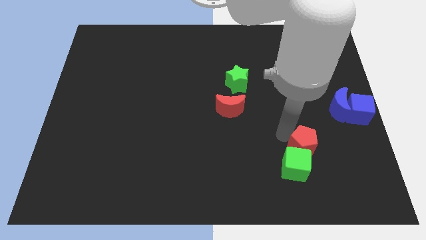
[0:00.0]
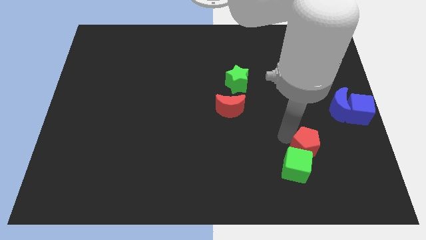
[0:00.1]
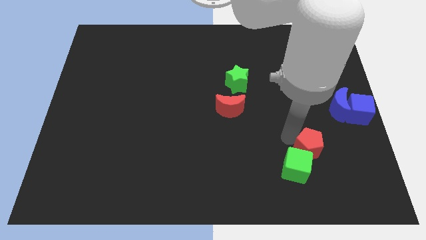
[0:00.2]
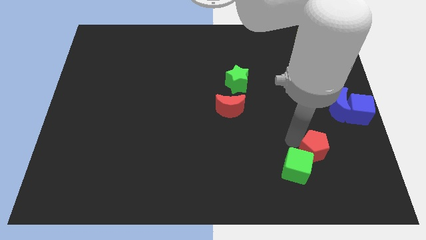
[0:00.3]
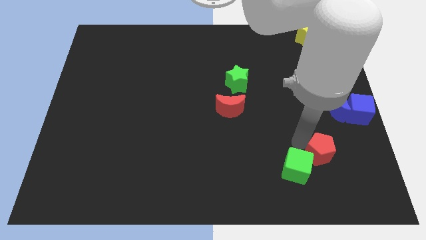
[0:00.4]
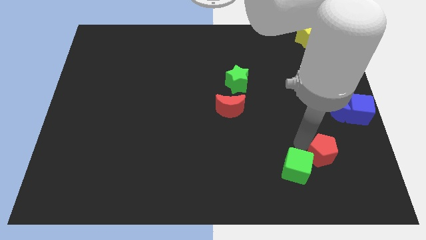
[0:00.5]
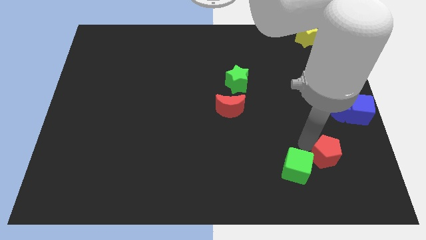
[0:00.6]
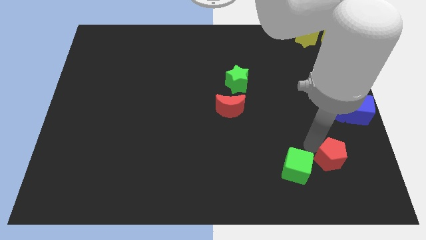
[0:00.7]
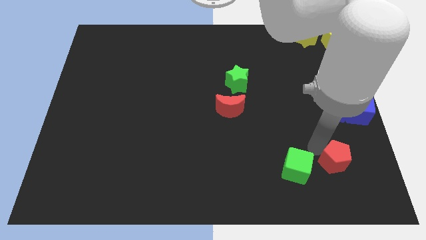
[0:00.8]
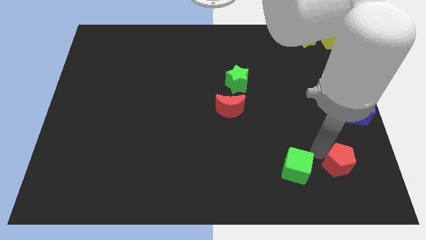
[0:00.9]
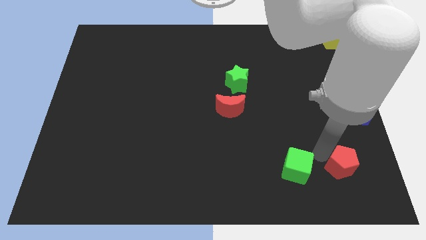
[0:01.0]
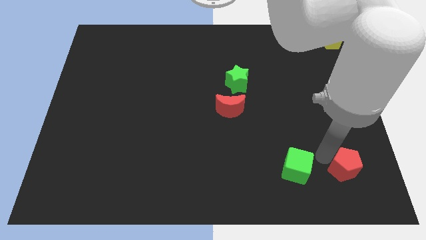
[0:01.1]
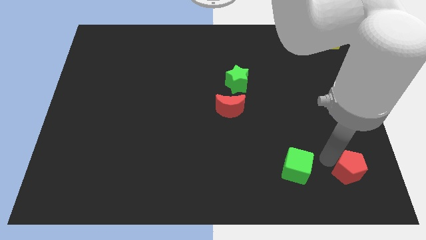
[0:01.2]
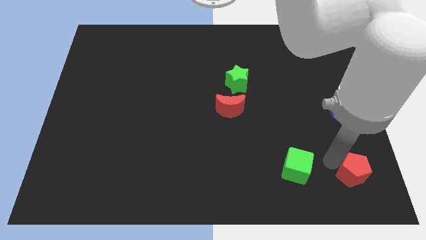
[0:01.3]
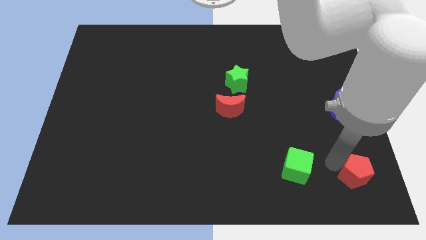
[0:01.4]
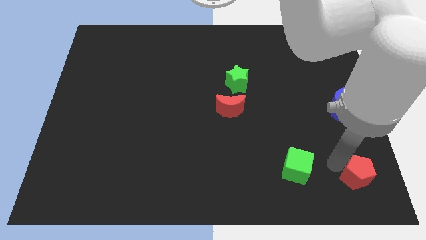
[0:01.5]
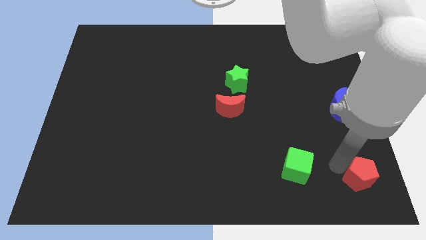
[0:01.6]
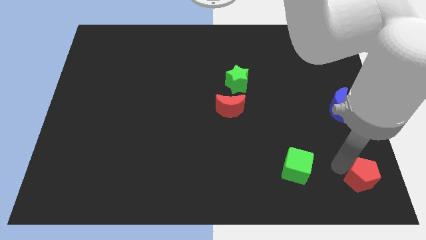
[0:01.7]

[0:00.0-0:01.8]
separate the red pentagon from the green cube

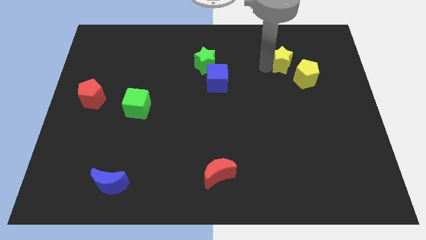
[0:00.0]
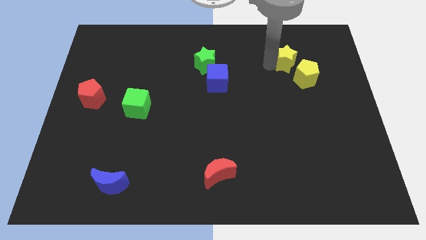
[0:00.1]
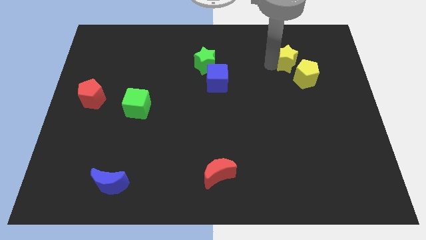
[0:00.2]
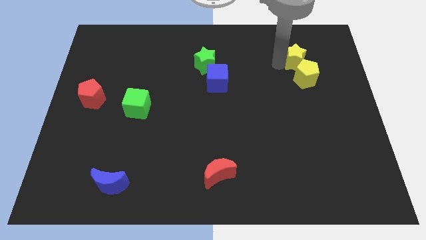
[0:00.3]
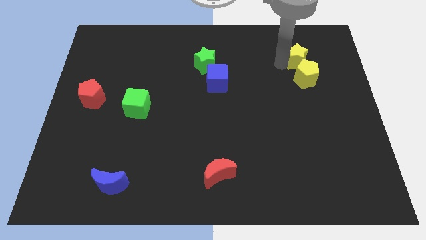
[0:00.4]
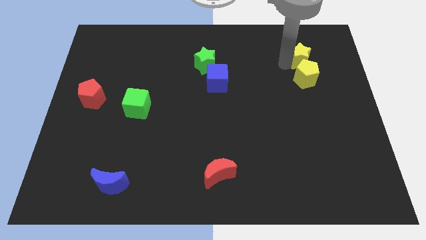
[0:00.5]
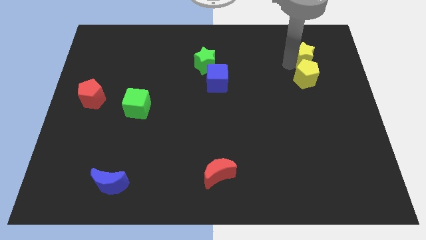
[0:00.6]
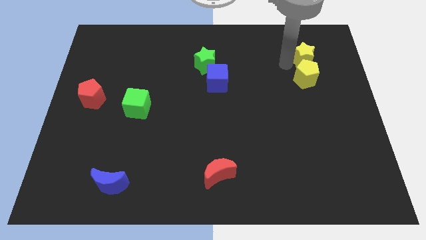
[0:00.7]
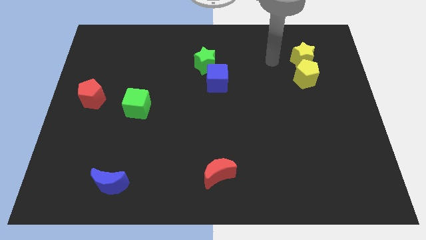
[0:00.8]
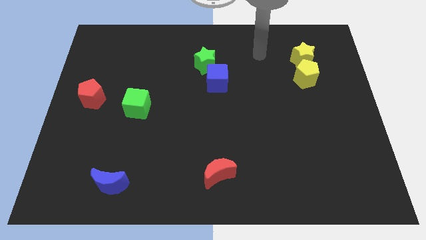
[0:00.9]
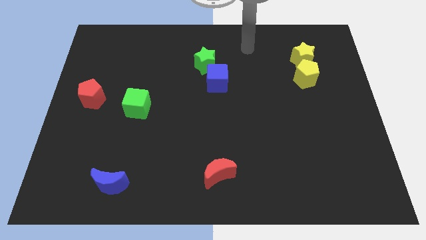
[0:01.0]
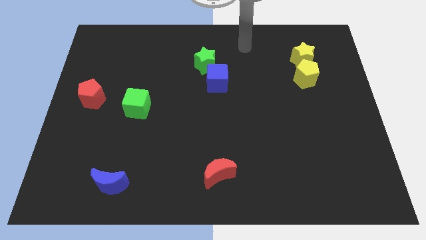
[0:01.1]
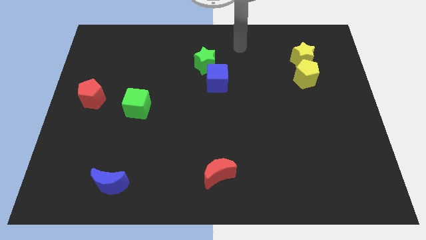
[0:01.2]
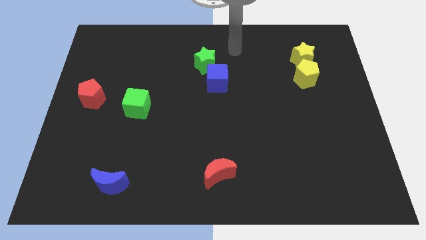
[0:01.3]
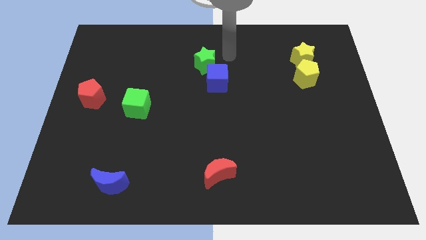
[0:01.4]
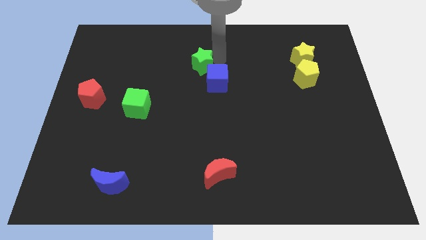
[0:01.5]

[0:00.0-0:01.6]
place the yellow star above the yellow pentagon

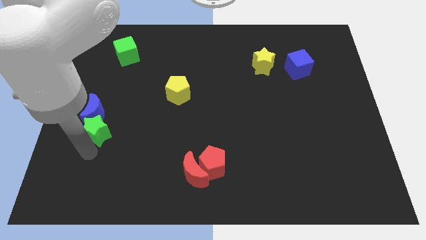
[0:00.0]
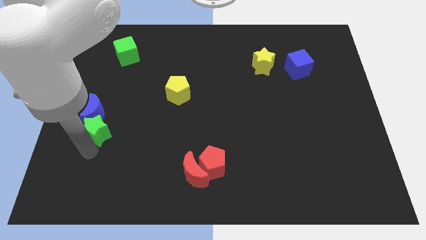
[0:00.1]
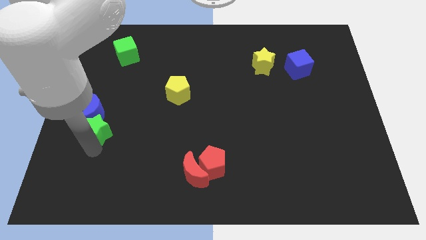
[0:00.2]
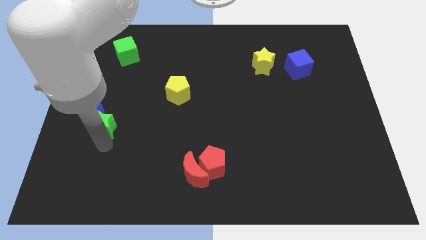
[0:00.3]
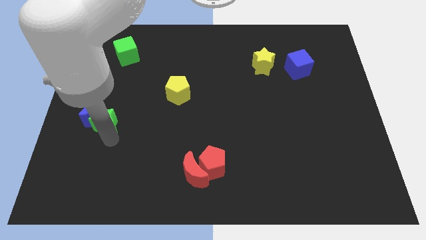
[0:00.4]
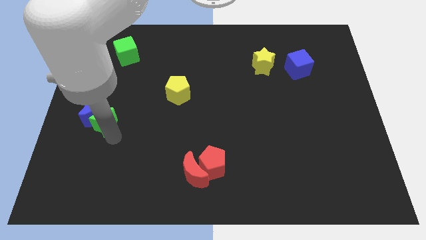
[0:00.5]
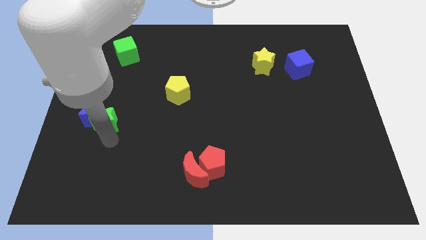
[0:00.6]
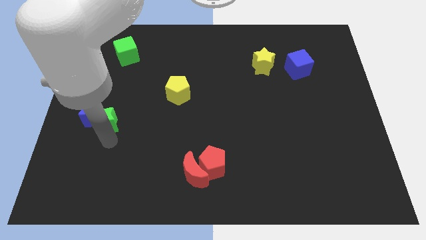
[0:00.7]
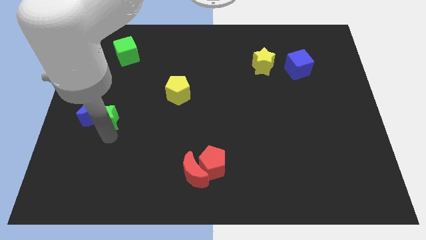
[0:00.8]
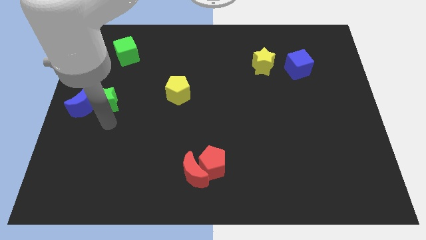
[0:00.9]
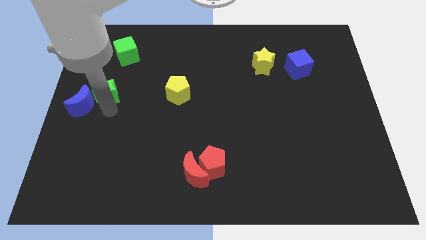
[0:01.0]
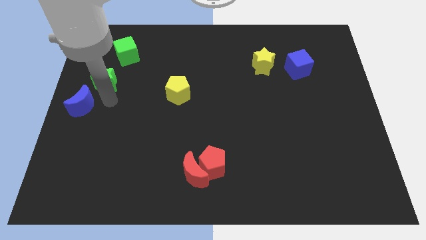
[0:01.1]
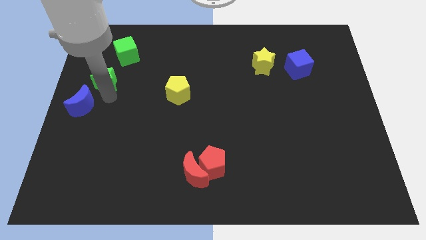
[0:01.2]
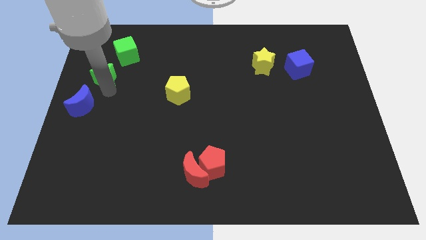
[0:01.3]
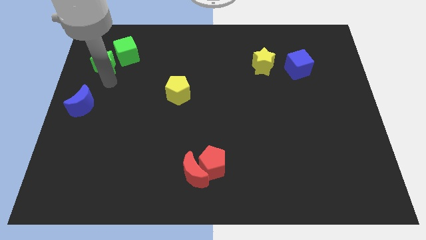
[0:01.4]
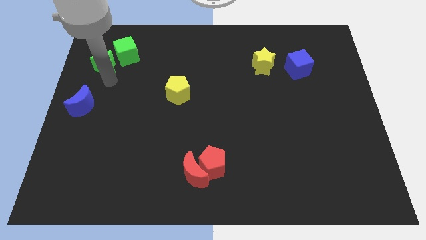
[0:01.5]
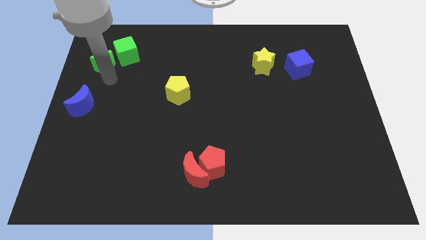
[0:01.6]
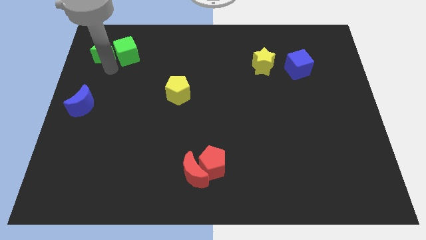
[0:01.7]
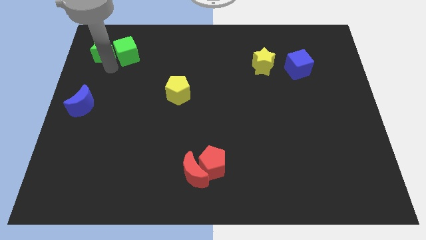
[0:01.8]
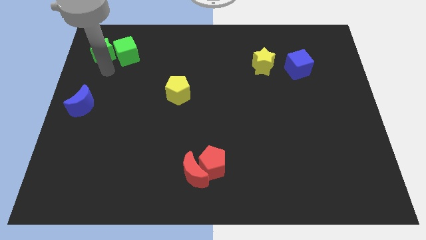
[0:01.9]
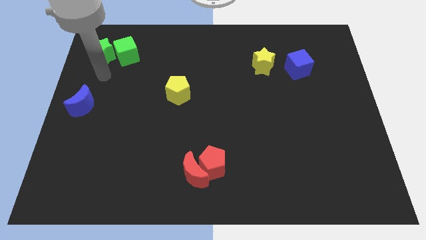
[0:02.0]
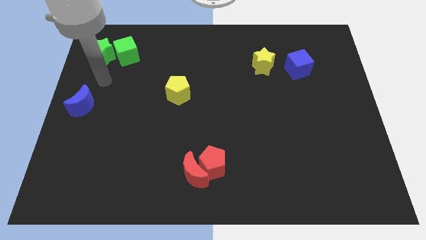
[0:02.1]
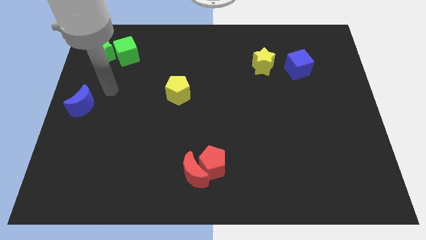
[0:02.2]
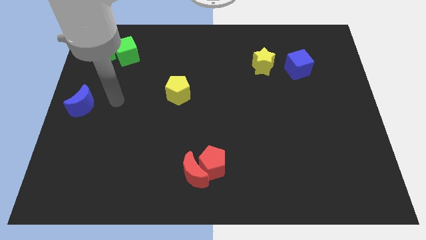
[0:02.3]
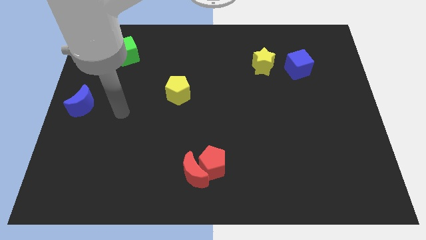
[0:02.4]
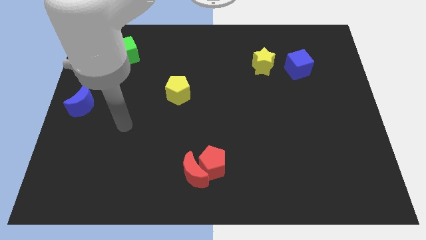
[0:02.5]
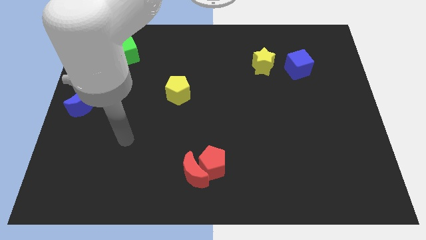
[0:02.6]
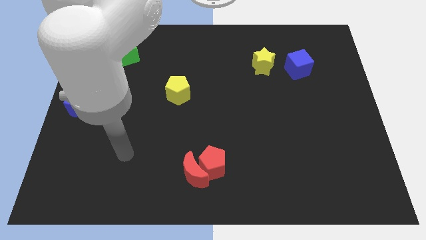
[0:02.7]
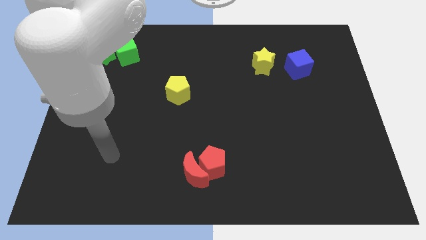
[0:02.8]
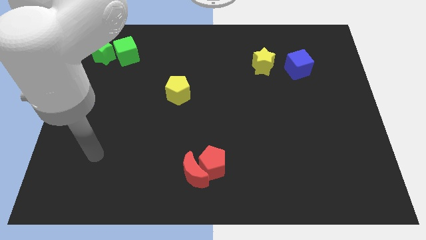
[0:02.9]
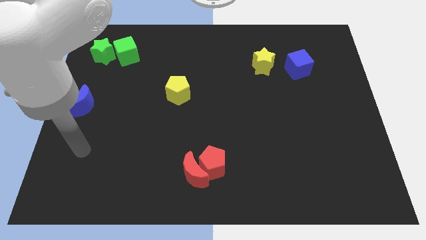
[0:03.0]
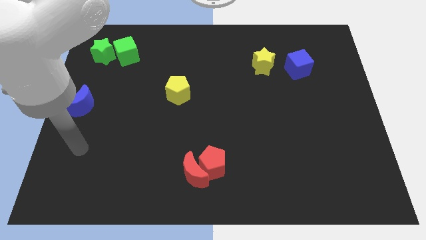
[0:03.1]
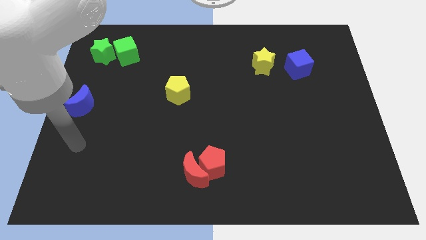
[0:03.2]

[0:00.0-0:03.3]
place the green star left to the green cube

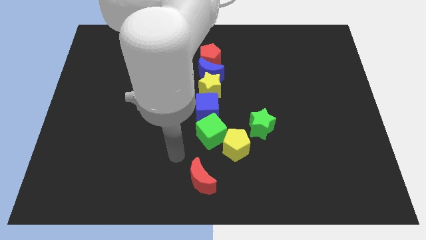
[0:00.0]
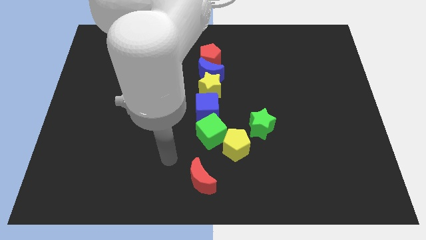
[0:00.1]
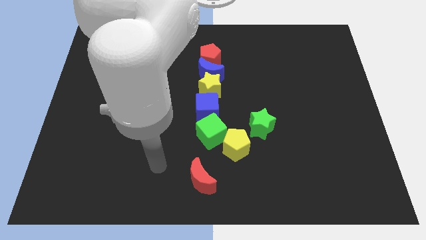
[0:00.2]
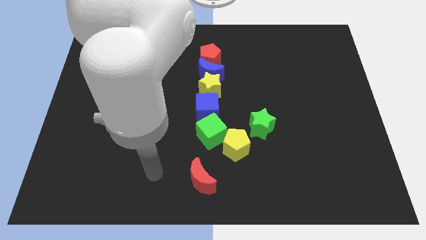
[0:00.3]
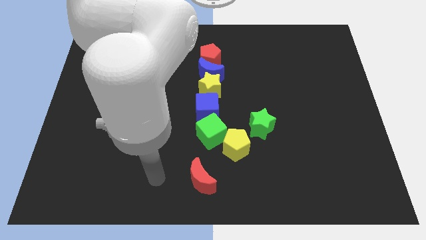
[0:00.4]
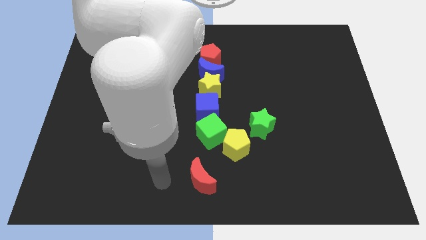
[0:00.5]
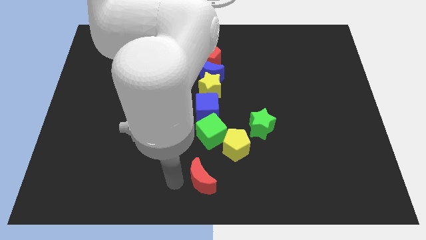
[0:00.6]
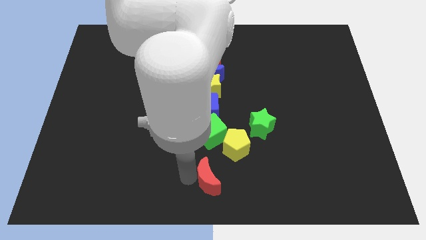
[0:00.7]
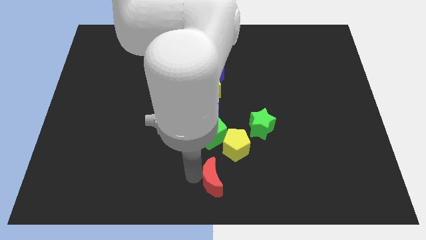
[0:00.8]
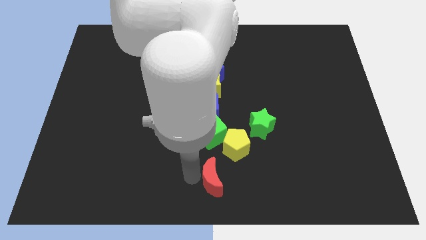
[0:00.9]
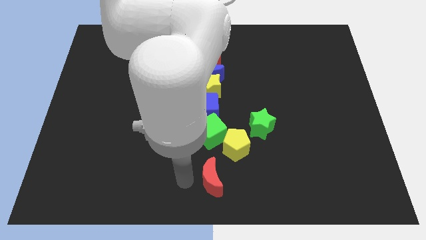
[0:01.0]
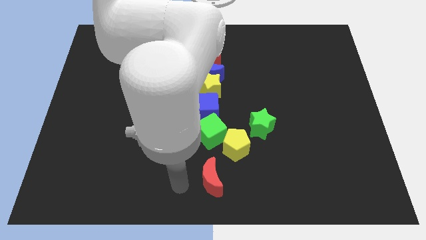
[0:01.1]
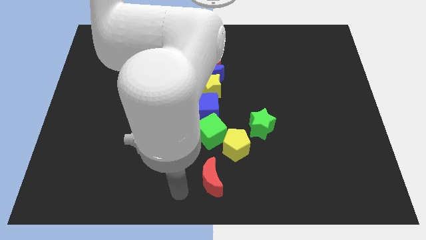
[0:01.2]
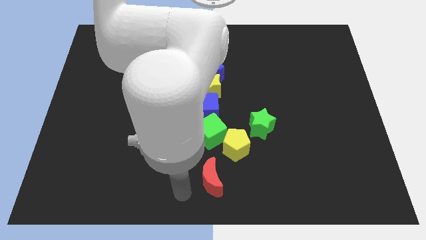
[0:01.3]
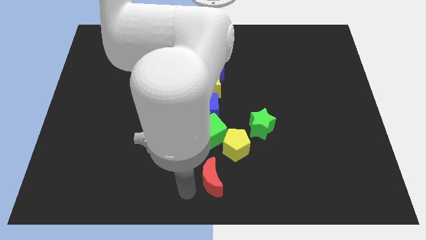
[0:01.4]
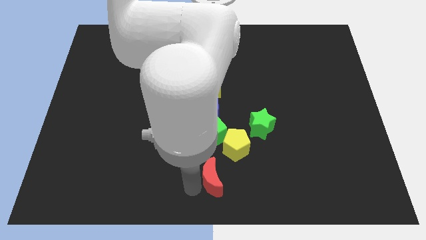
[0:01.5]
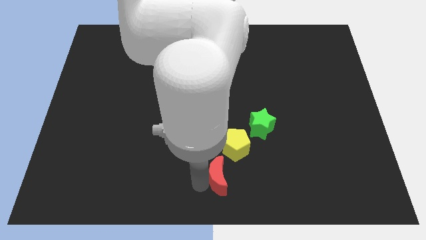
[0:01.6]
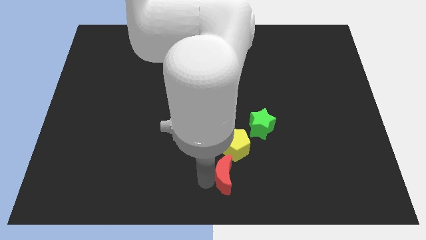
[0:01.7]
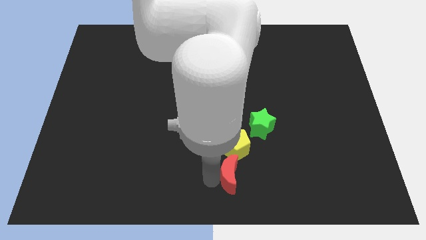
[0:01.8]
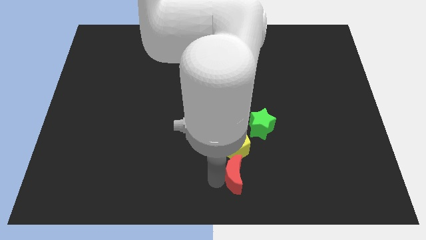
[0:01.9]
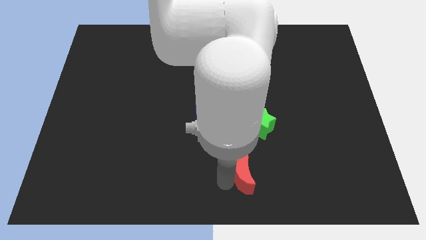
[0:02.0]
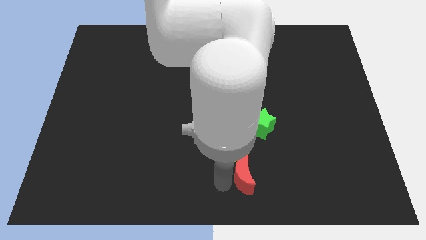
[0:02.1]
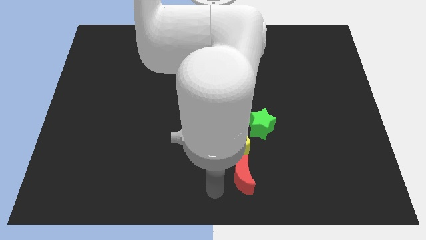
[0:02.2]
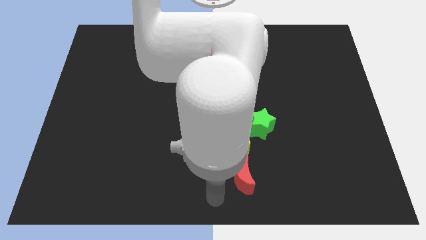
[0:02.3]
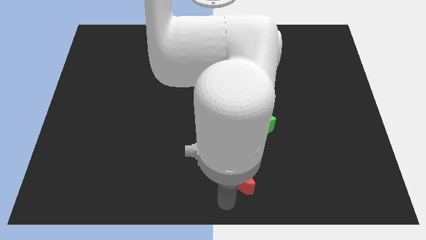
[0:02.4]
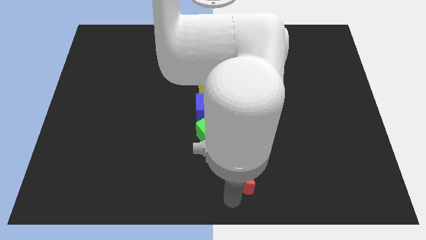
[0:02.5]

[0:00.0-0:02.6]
put the red crescent underneath the yellow pentagon
